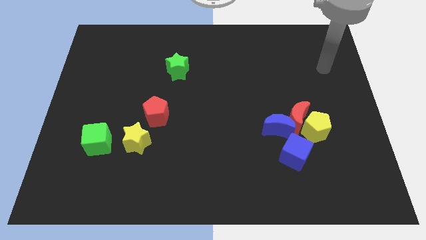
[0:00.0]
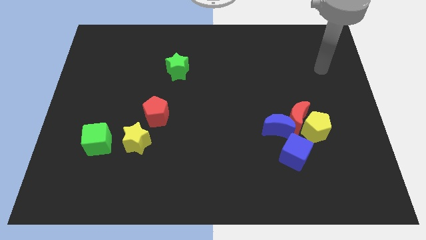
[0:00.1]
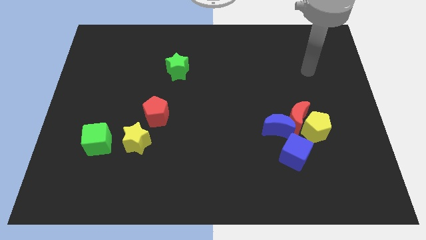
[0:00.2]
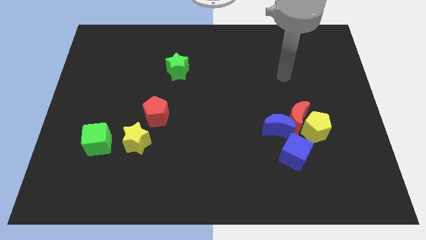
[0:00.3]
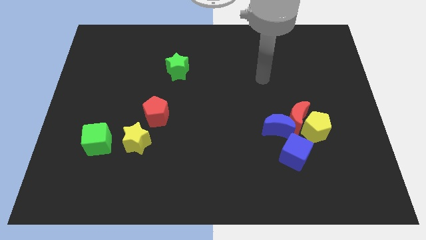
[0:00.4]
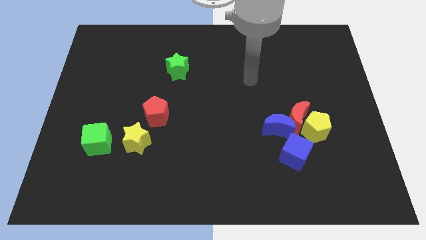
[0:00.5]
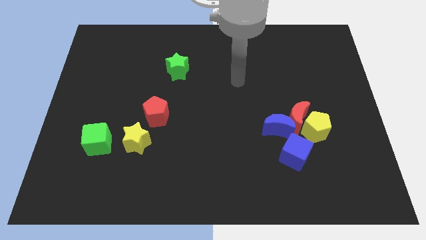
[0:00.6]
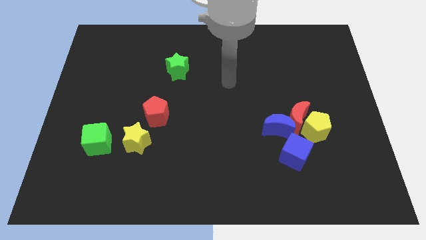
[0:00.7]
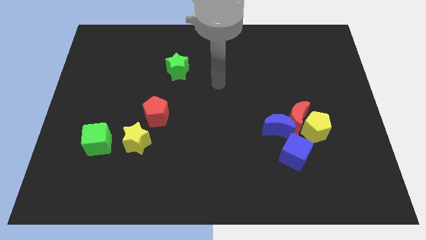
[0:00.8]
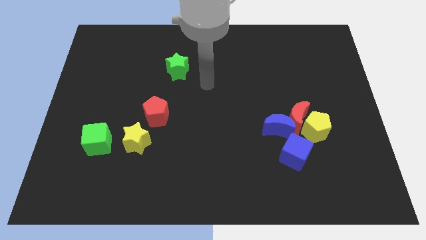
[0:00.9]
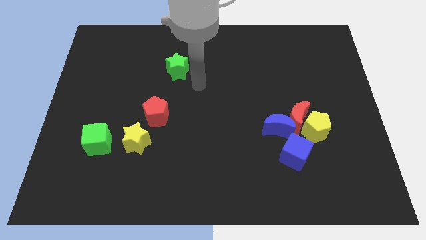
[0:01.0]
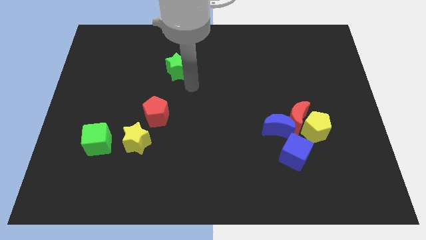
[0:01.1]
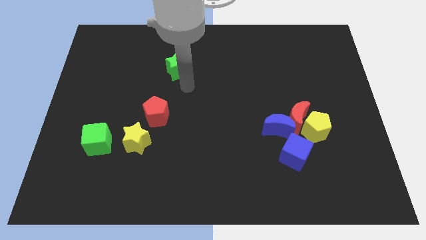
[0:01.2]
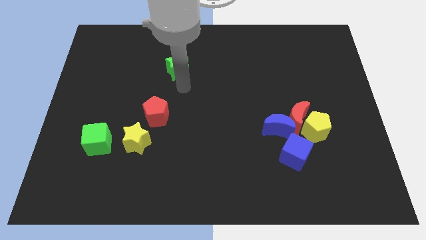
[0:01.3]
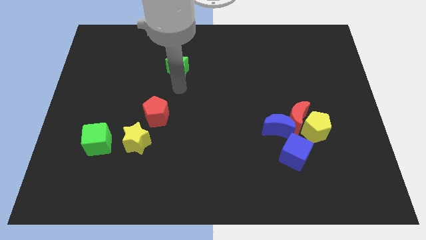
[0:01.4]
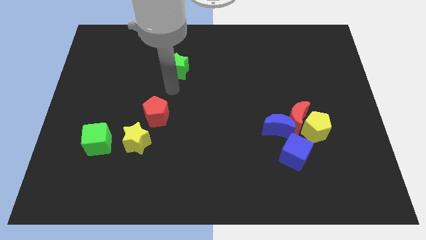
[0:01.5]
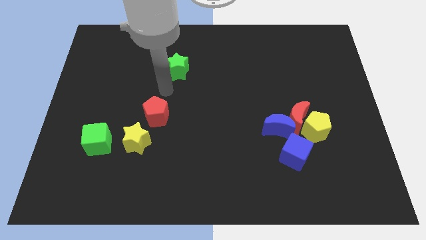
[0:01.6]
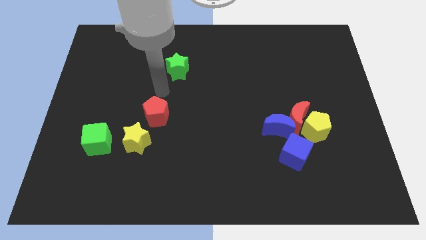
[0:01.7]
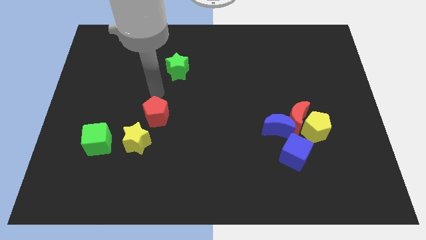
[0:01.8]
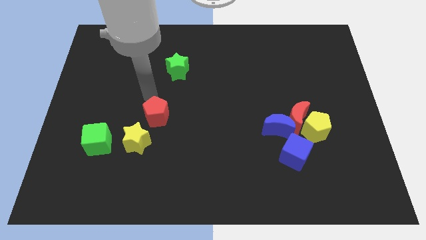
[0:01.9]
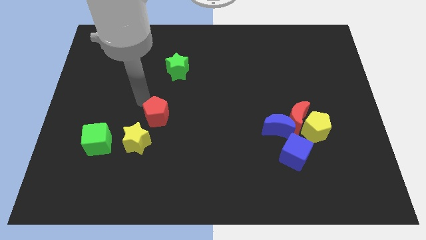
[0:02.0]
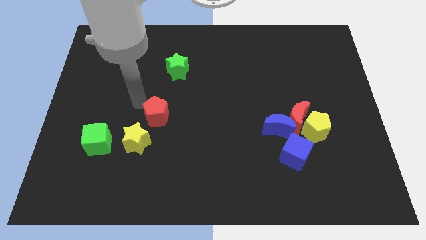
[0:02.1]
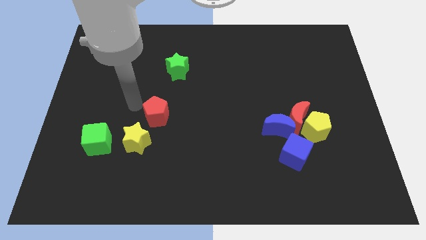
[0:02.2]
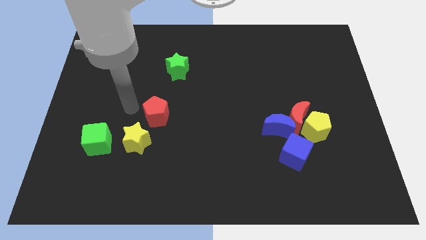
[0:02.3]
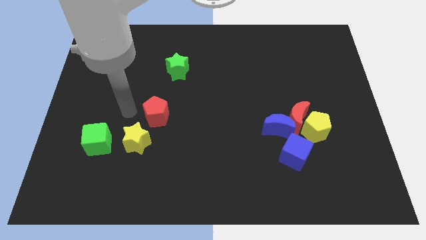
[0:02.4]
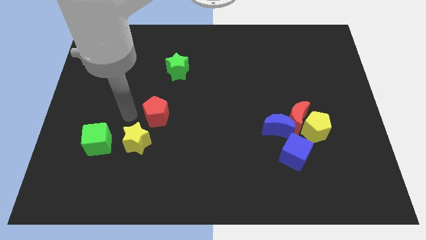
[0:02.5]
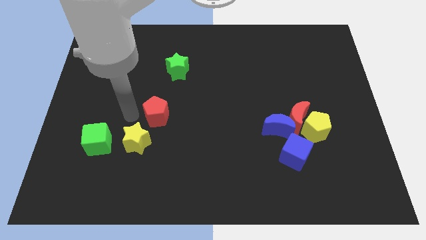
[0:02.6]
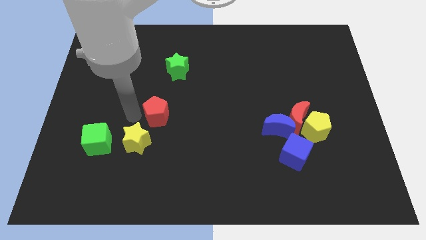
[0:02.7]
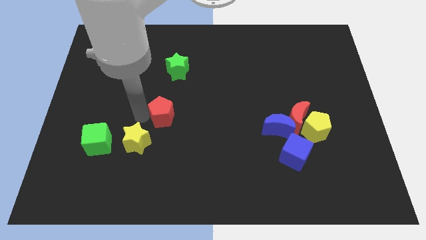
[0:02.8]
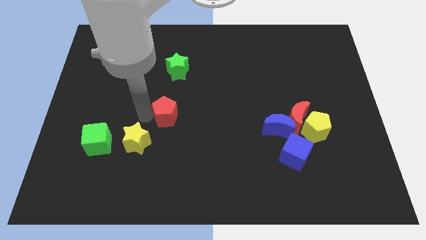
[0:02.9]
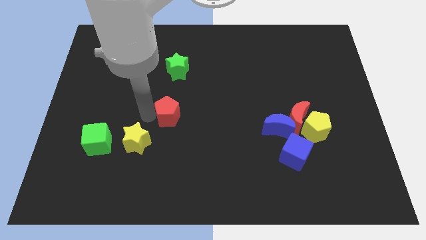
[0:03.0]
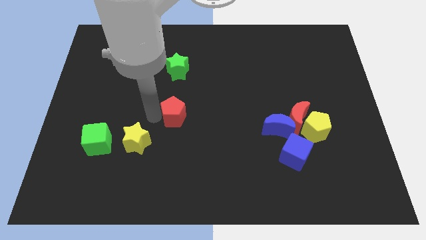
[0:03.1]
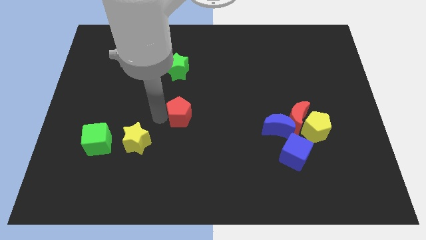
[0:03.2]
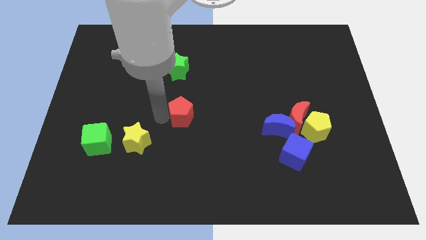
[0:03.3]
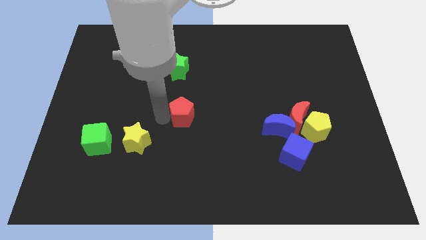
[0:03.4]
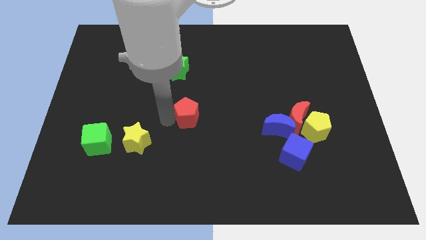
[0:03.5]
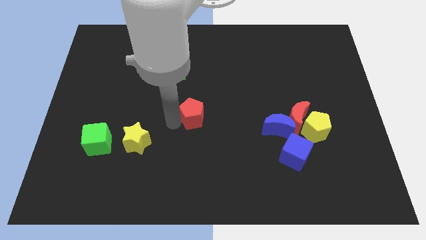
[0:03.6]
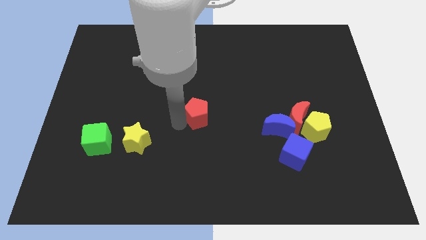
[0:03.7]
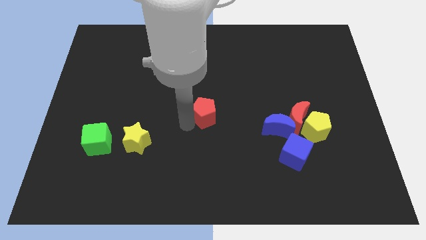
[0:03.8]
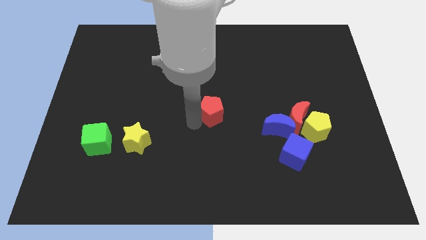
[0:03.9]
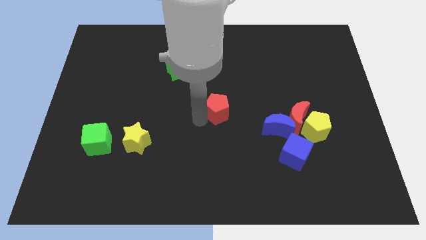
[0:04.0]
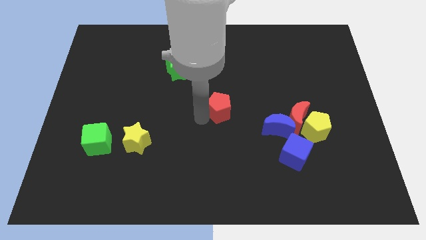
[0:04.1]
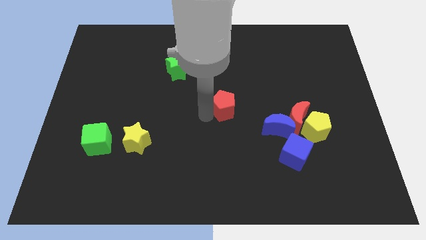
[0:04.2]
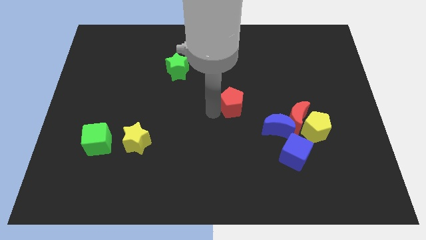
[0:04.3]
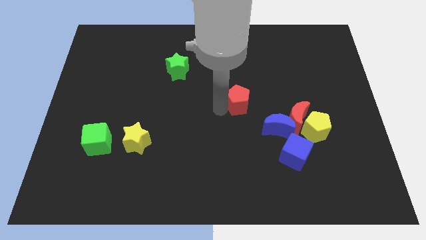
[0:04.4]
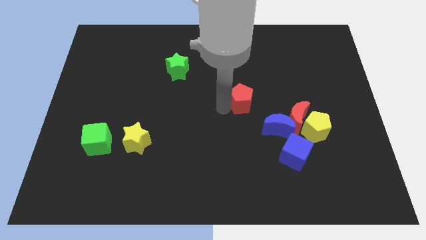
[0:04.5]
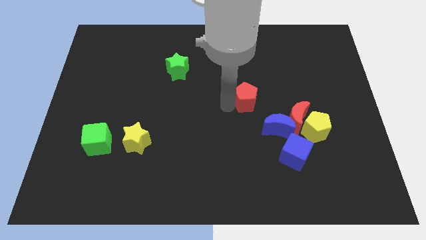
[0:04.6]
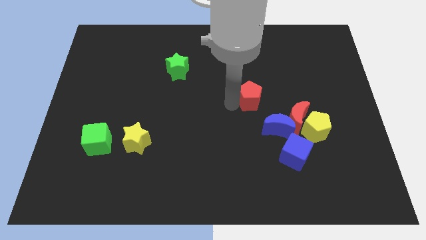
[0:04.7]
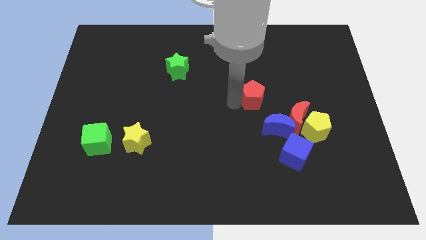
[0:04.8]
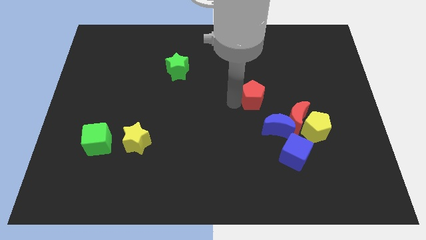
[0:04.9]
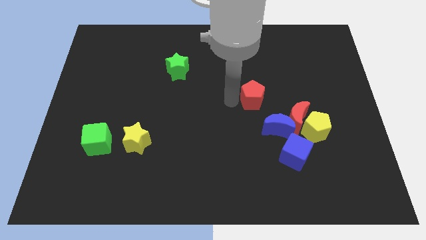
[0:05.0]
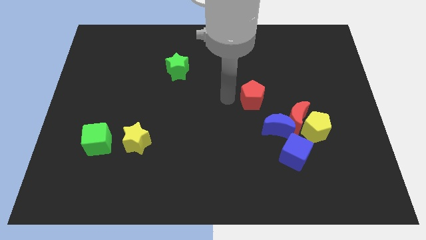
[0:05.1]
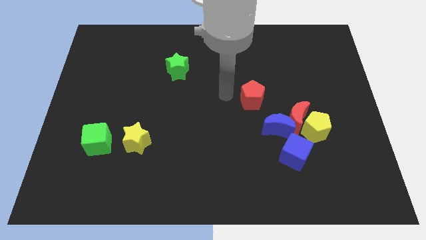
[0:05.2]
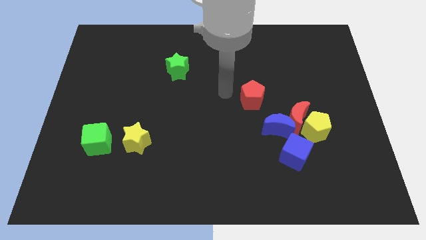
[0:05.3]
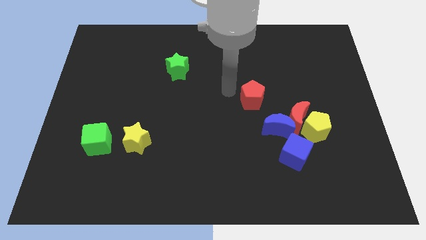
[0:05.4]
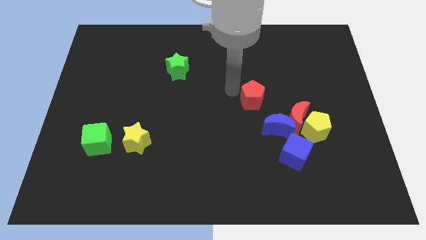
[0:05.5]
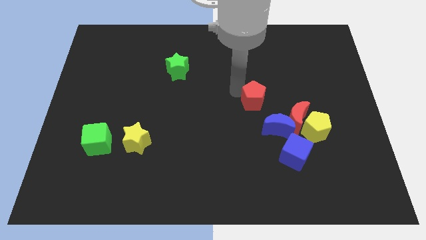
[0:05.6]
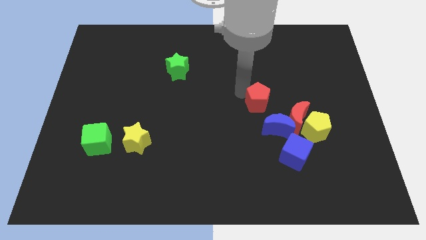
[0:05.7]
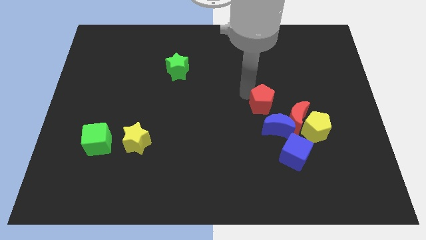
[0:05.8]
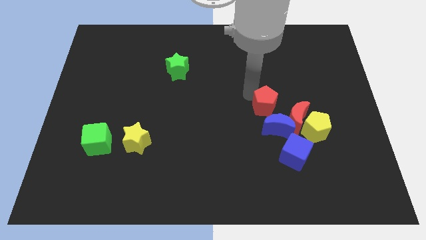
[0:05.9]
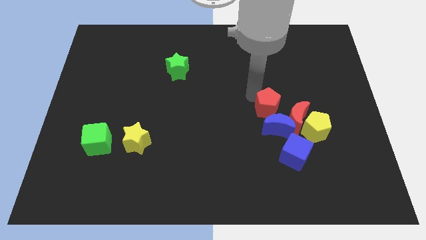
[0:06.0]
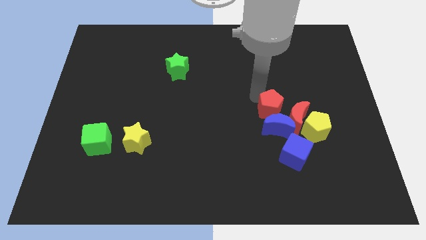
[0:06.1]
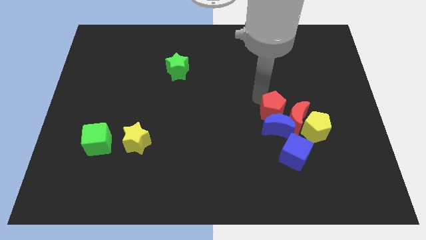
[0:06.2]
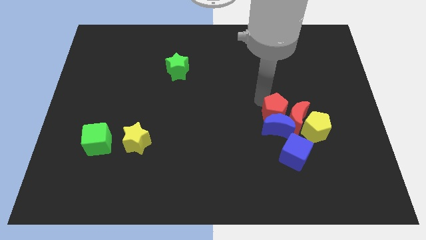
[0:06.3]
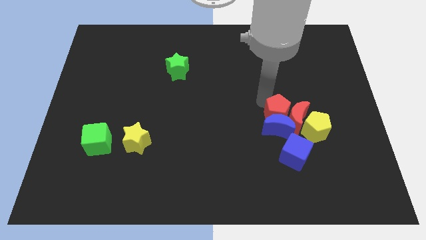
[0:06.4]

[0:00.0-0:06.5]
move the red pentagon to the red moon

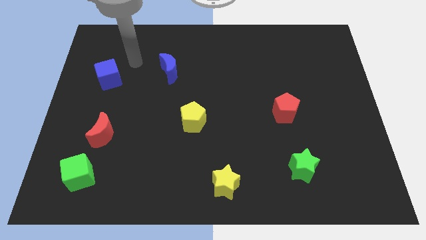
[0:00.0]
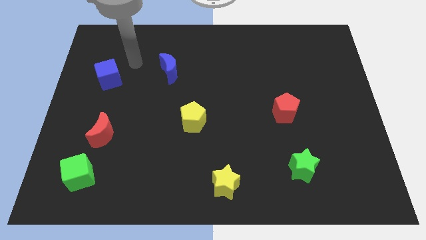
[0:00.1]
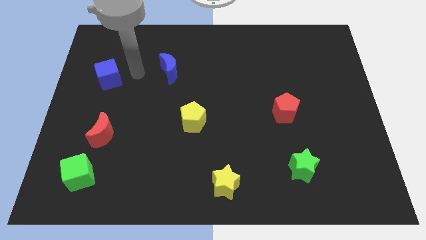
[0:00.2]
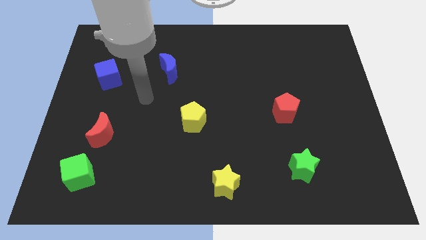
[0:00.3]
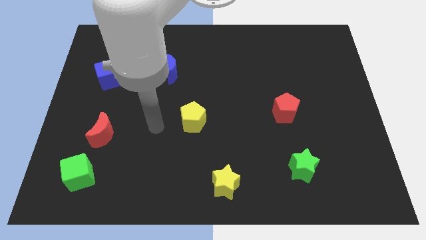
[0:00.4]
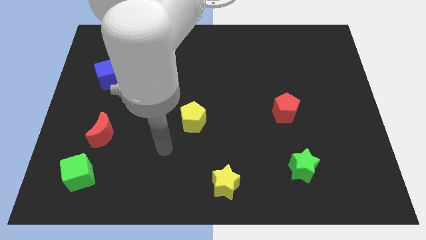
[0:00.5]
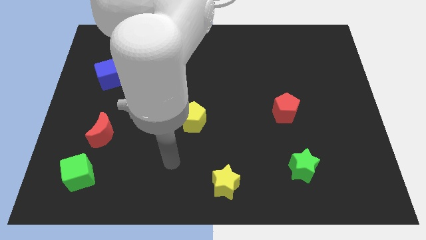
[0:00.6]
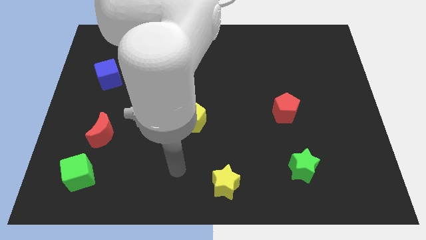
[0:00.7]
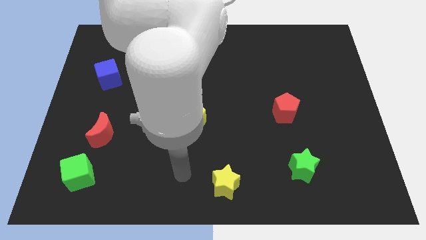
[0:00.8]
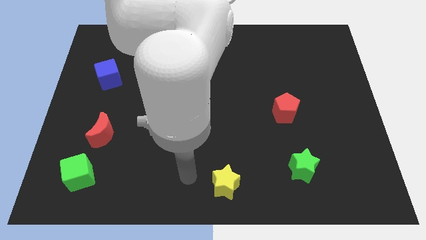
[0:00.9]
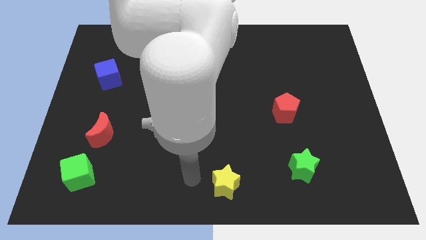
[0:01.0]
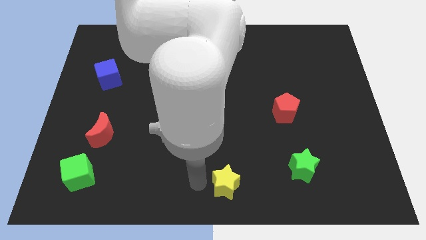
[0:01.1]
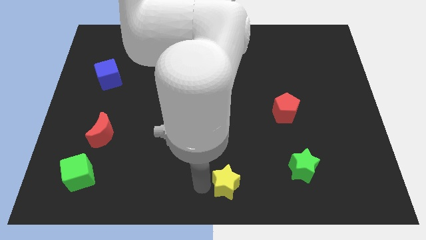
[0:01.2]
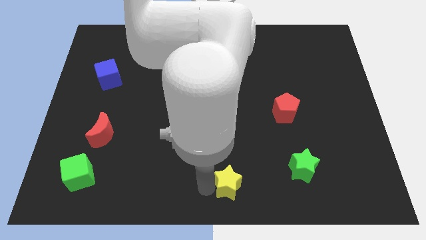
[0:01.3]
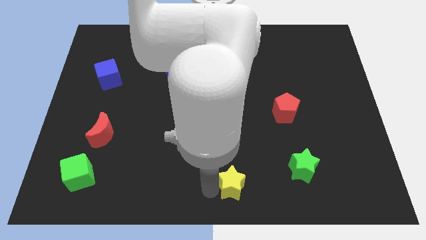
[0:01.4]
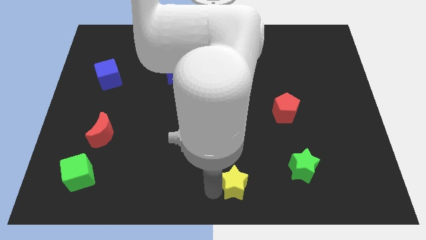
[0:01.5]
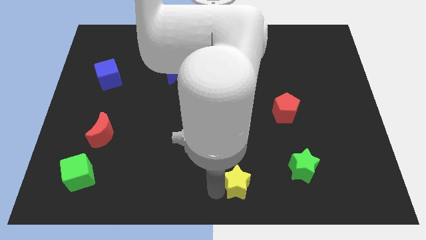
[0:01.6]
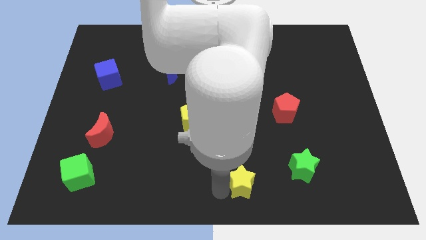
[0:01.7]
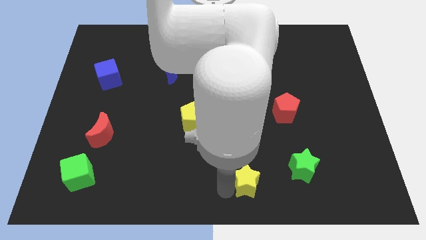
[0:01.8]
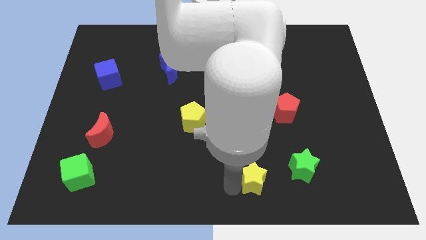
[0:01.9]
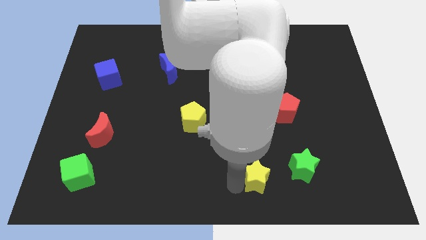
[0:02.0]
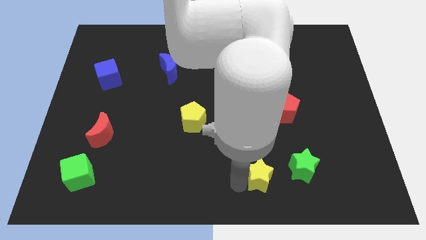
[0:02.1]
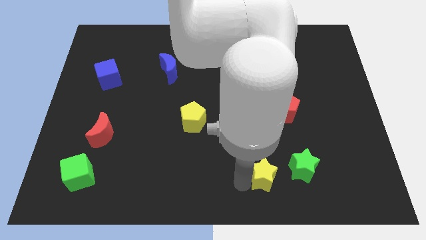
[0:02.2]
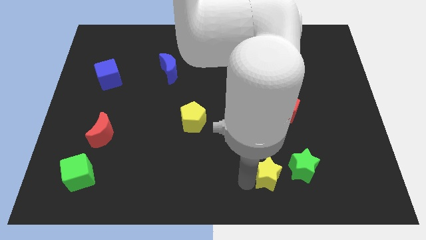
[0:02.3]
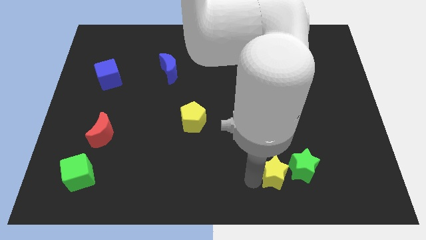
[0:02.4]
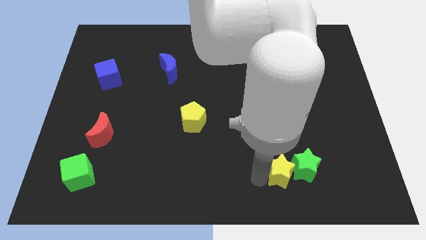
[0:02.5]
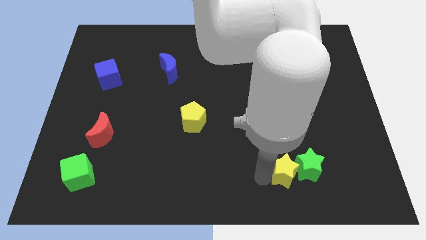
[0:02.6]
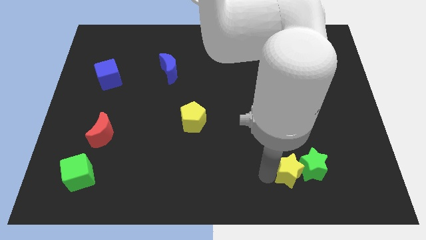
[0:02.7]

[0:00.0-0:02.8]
move the yellow star to the green star
